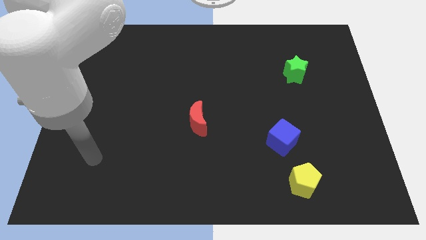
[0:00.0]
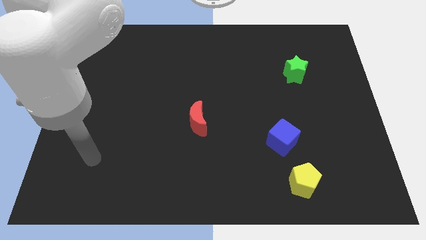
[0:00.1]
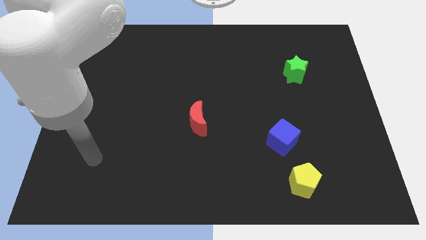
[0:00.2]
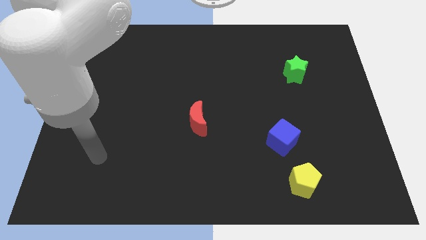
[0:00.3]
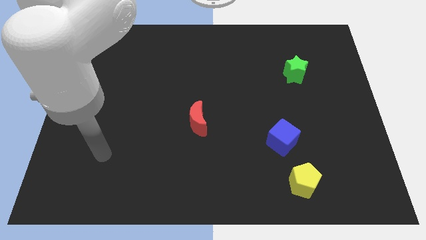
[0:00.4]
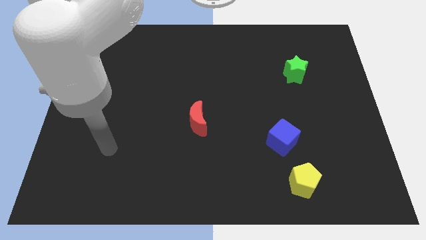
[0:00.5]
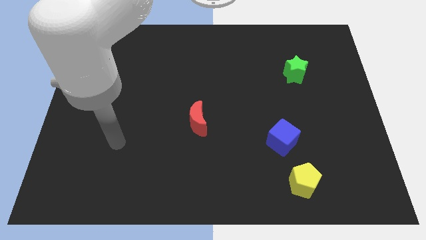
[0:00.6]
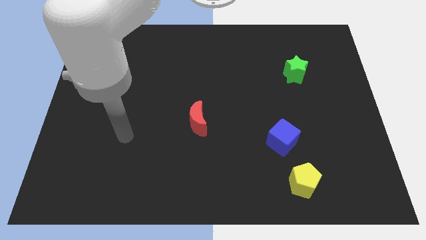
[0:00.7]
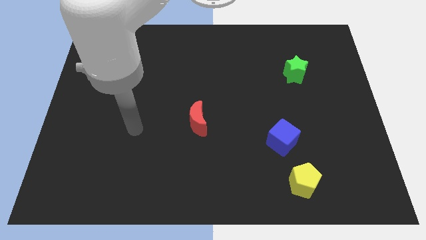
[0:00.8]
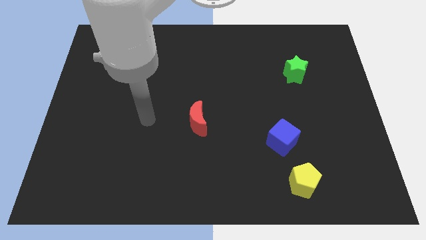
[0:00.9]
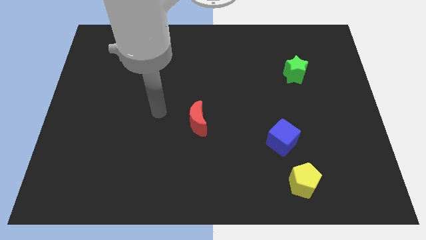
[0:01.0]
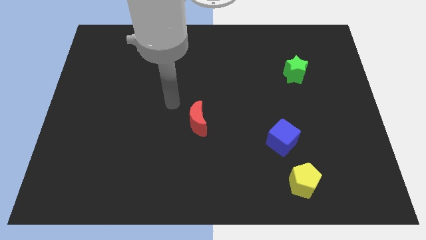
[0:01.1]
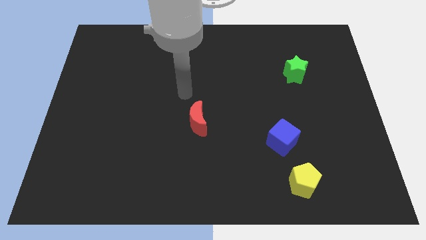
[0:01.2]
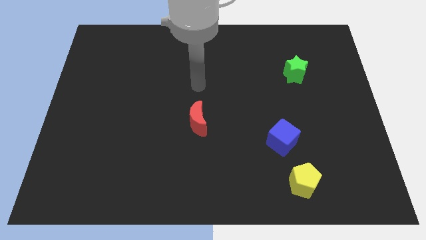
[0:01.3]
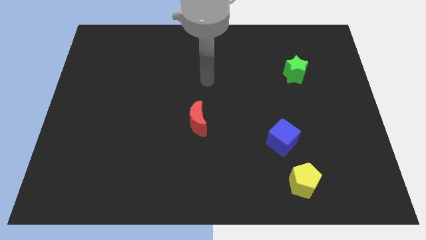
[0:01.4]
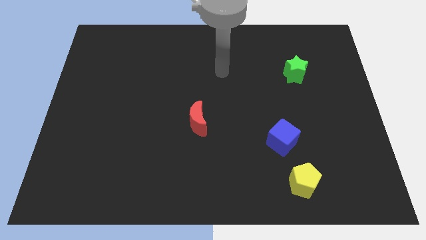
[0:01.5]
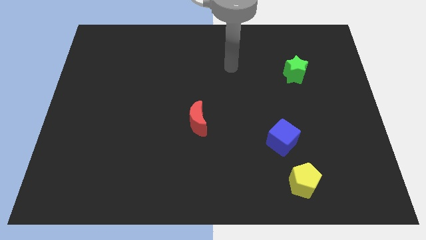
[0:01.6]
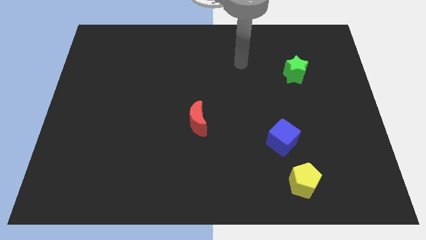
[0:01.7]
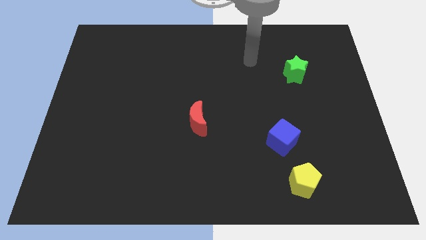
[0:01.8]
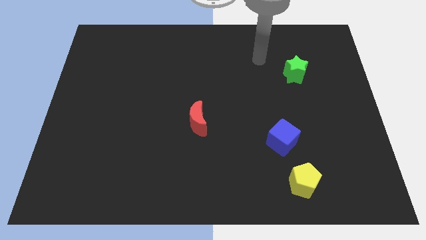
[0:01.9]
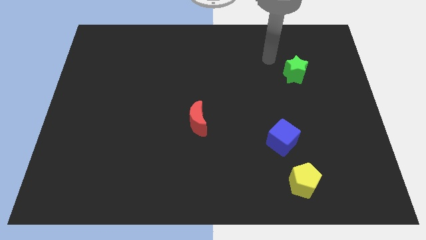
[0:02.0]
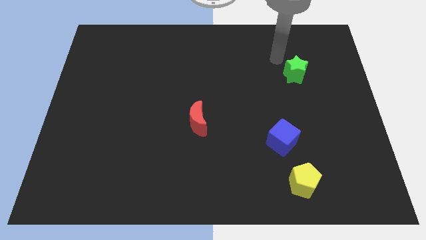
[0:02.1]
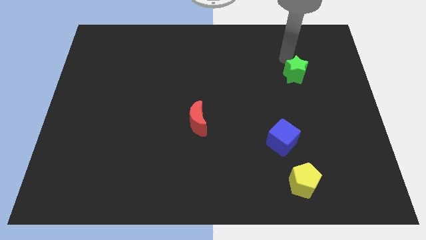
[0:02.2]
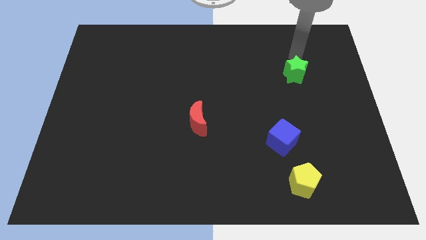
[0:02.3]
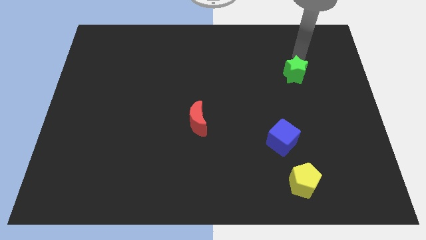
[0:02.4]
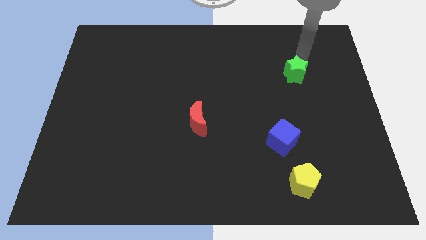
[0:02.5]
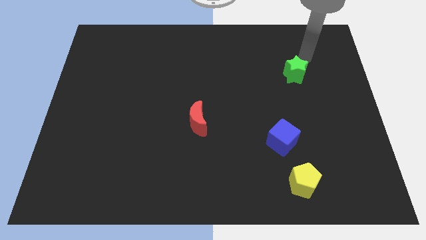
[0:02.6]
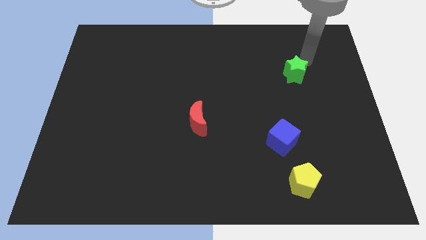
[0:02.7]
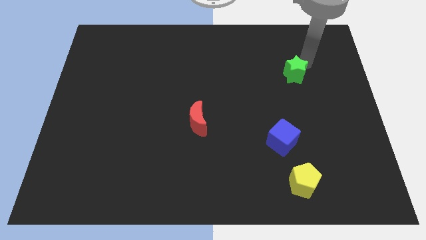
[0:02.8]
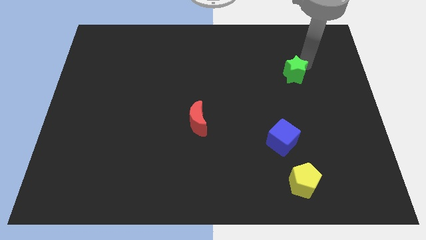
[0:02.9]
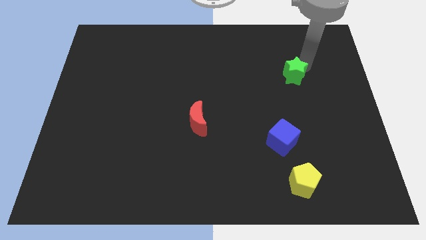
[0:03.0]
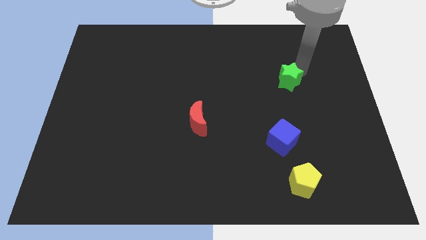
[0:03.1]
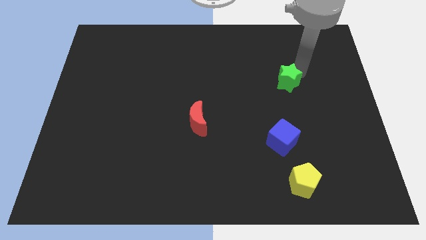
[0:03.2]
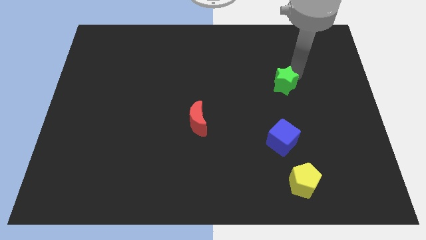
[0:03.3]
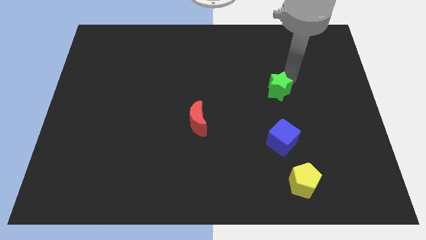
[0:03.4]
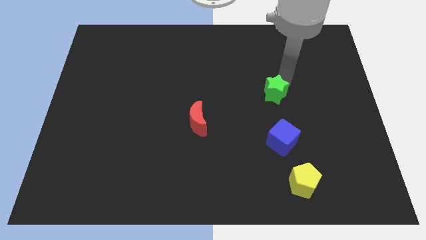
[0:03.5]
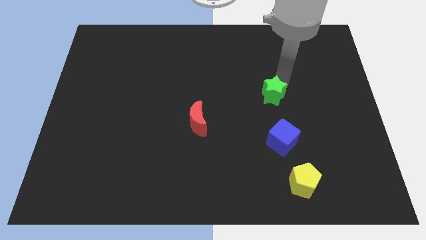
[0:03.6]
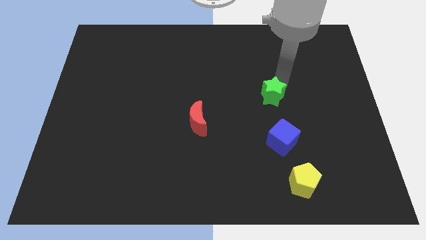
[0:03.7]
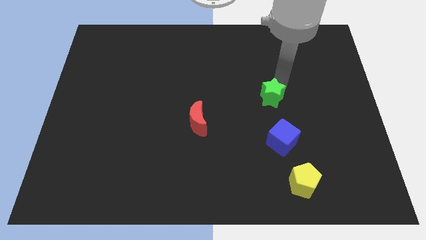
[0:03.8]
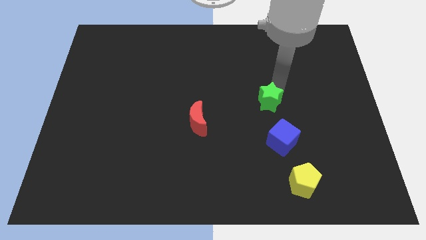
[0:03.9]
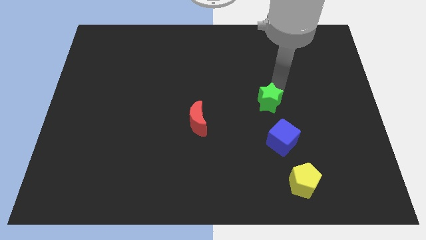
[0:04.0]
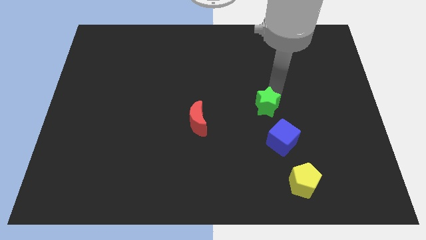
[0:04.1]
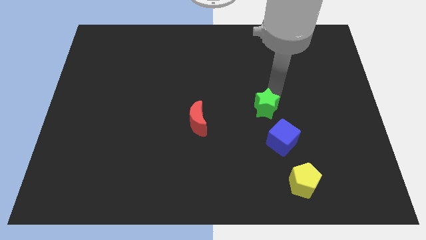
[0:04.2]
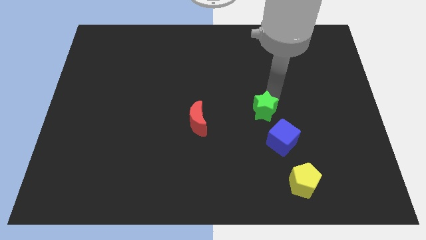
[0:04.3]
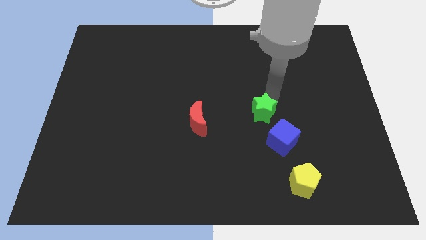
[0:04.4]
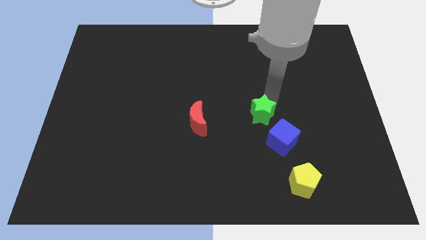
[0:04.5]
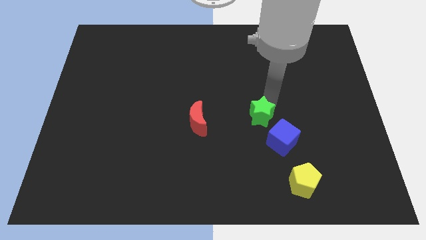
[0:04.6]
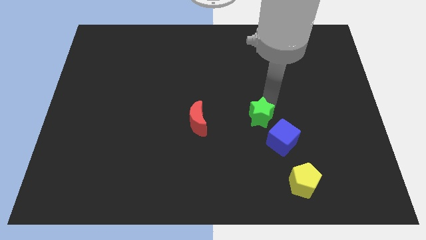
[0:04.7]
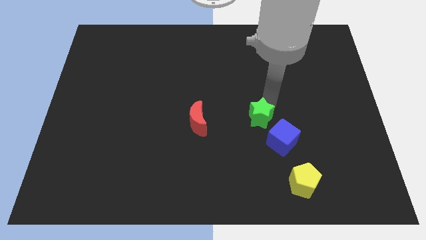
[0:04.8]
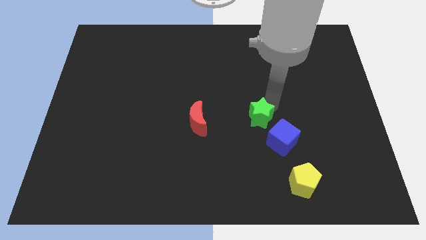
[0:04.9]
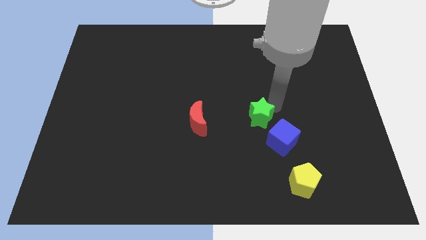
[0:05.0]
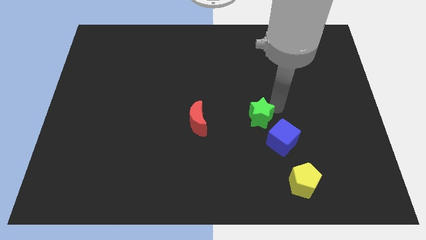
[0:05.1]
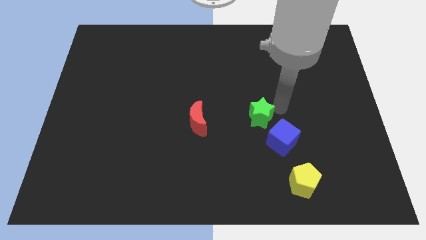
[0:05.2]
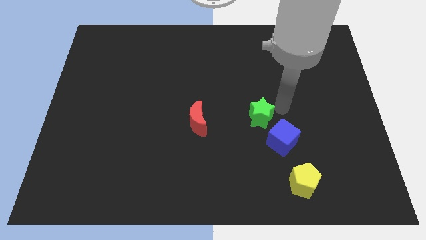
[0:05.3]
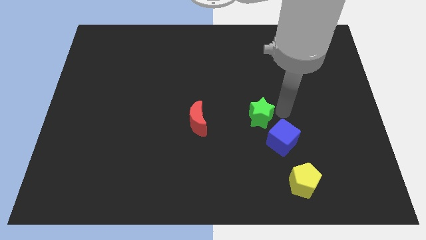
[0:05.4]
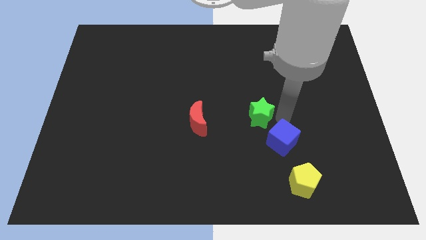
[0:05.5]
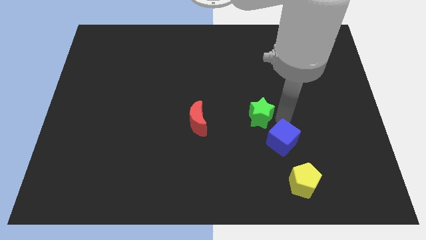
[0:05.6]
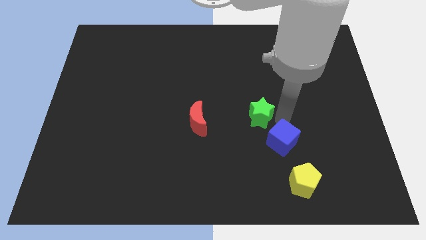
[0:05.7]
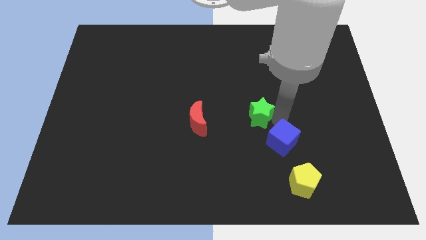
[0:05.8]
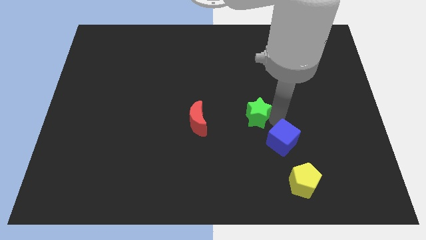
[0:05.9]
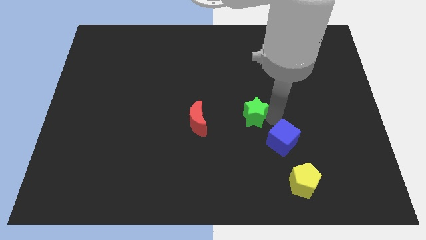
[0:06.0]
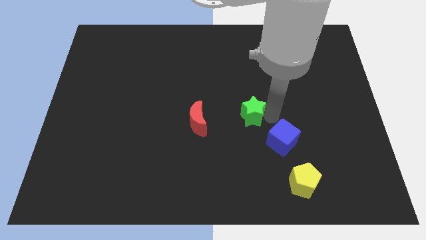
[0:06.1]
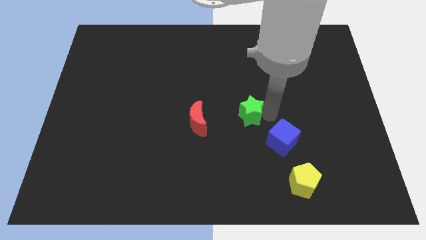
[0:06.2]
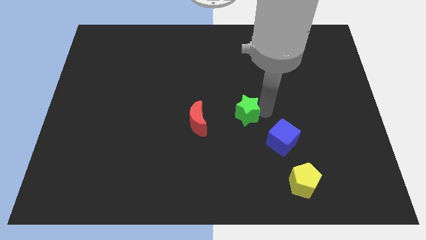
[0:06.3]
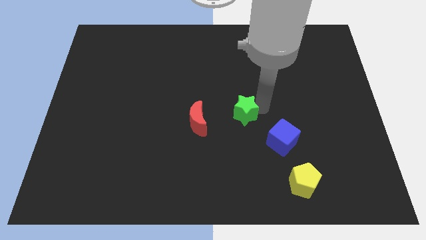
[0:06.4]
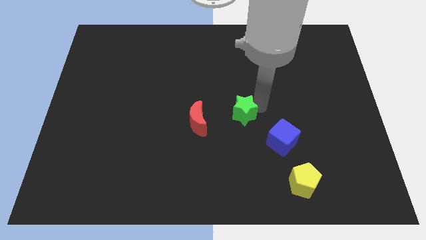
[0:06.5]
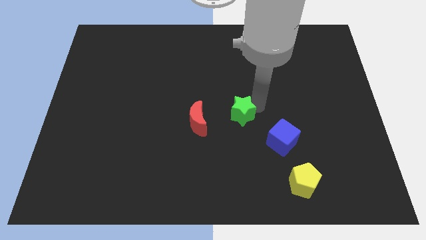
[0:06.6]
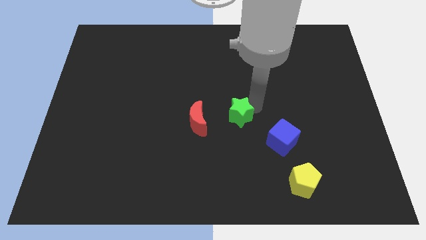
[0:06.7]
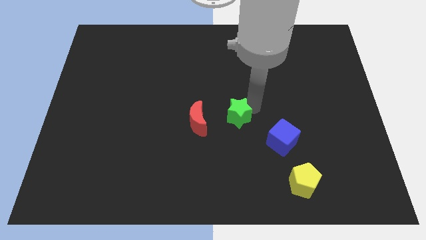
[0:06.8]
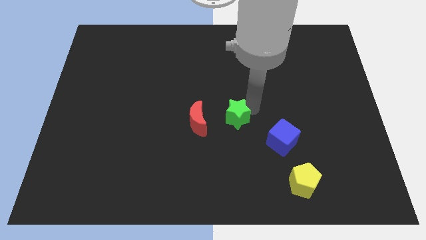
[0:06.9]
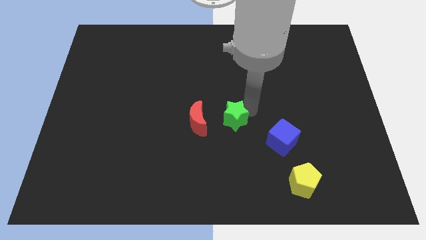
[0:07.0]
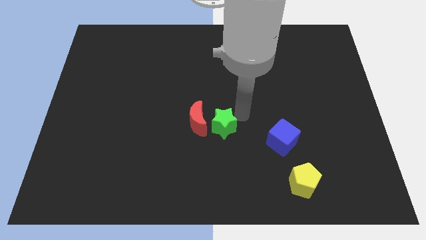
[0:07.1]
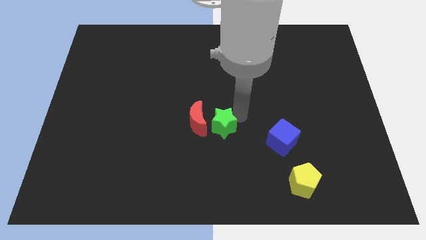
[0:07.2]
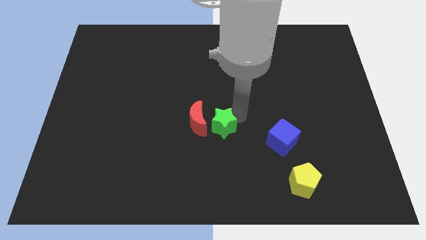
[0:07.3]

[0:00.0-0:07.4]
put the green block next to the moon

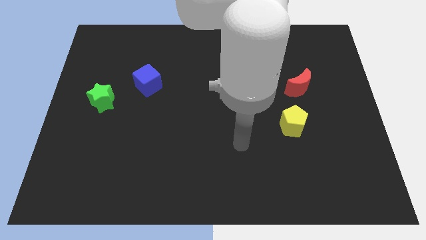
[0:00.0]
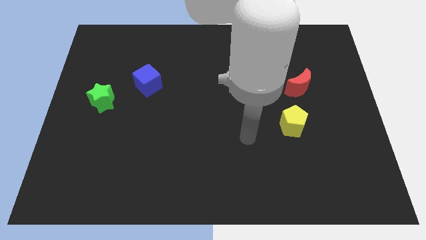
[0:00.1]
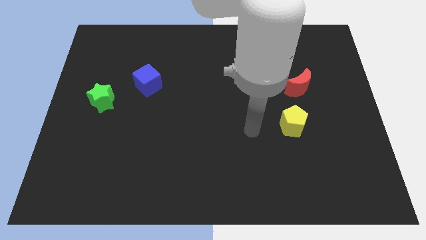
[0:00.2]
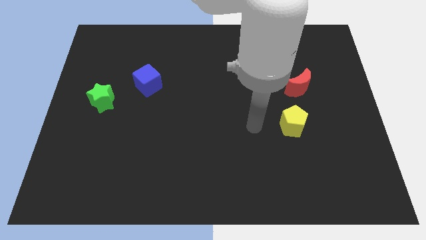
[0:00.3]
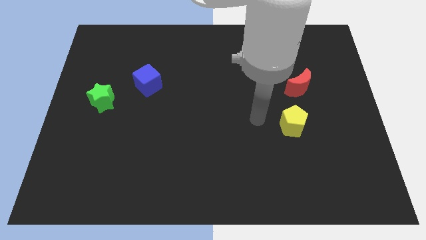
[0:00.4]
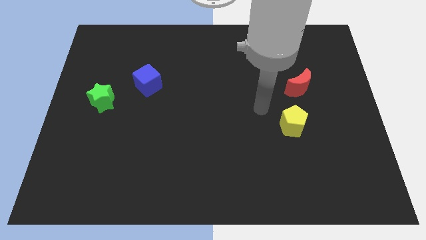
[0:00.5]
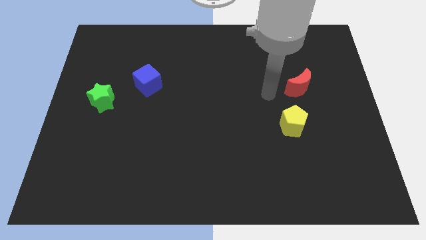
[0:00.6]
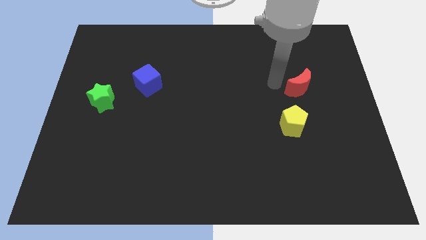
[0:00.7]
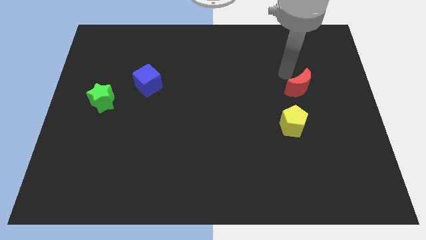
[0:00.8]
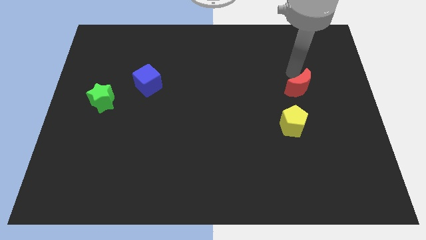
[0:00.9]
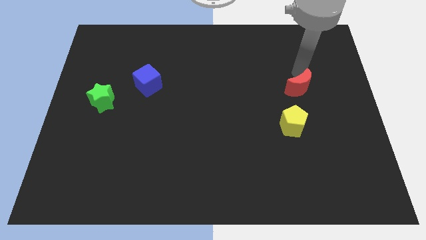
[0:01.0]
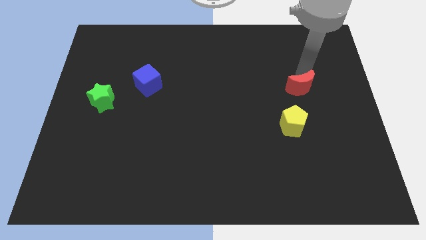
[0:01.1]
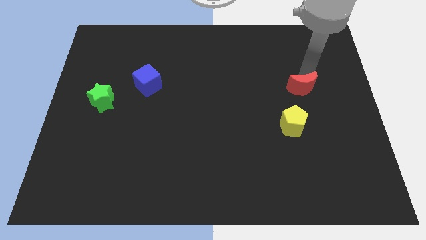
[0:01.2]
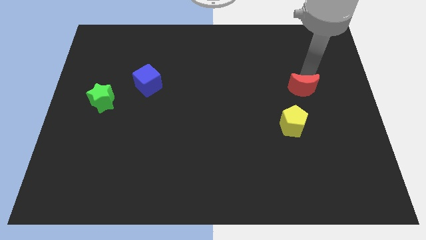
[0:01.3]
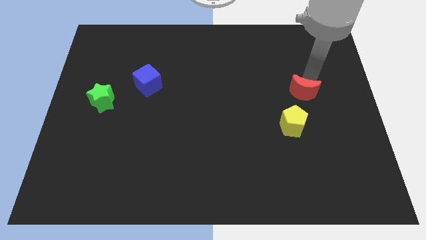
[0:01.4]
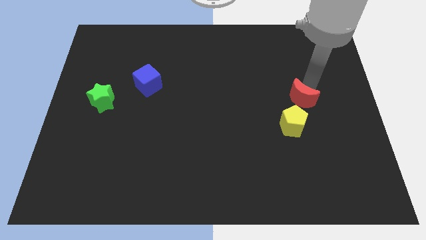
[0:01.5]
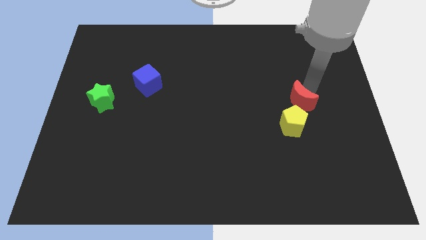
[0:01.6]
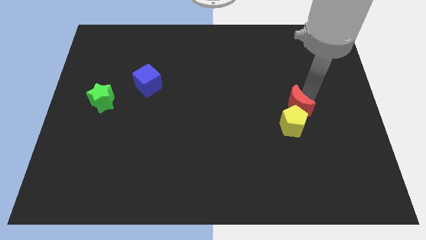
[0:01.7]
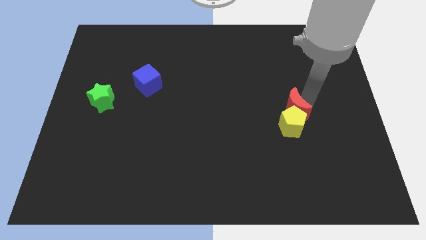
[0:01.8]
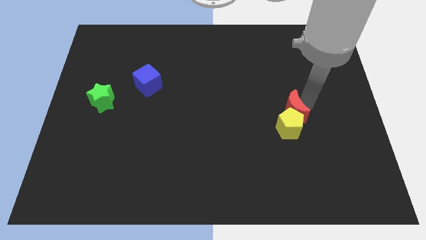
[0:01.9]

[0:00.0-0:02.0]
move the red moon to the yellow block
